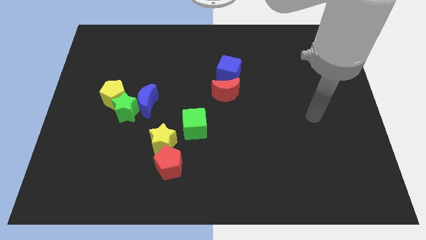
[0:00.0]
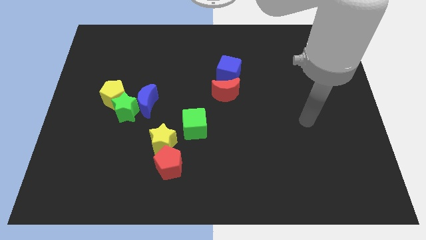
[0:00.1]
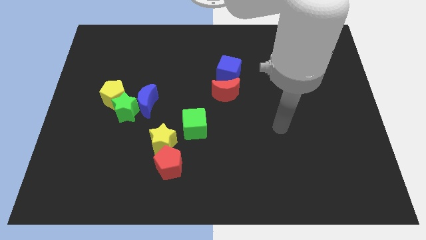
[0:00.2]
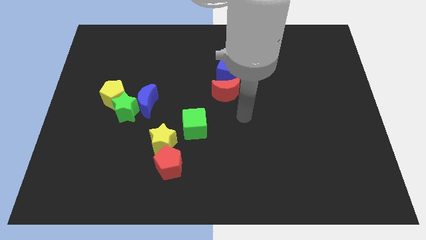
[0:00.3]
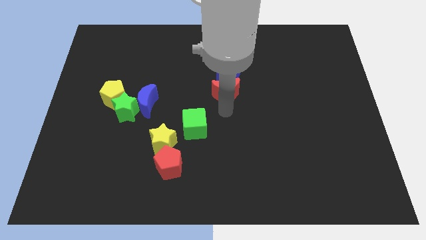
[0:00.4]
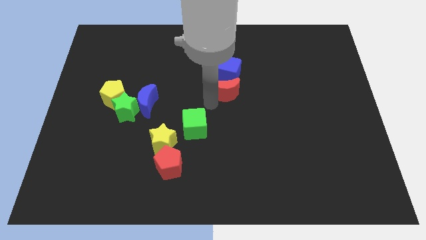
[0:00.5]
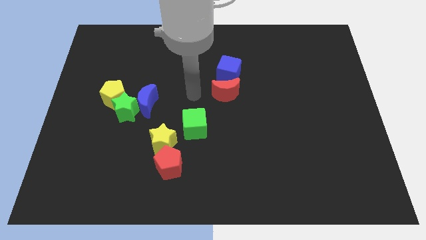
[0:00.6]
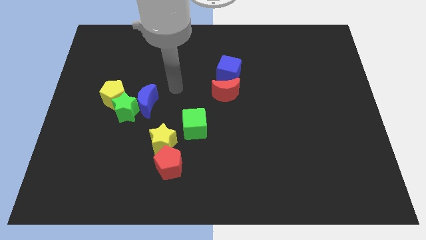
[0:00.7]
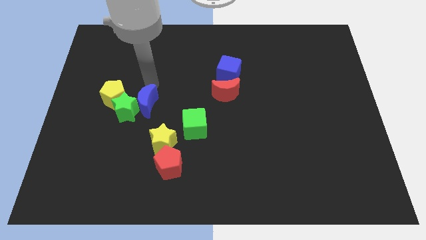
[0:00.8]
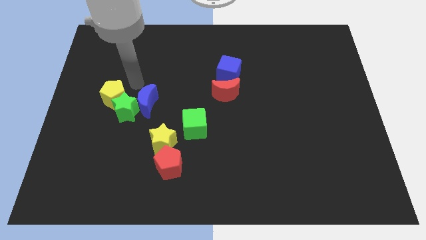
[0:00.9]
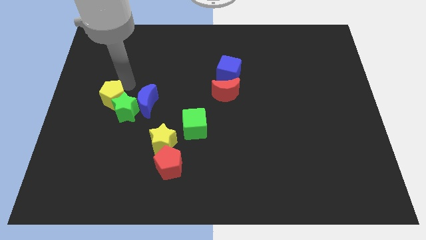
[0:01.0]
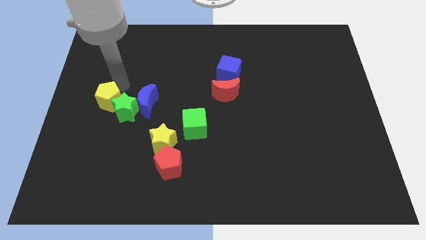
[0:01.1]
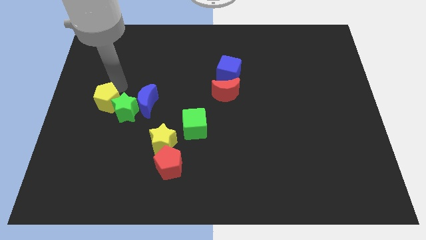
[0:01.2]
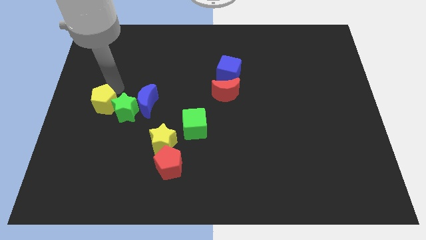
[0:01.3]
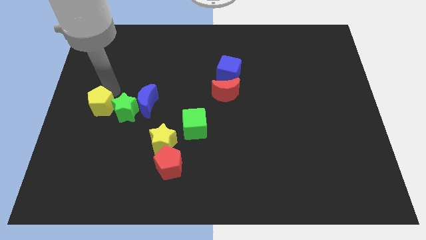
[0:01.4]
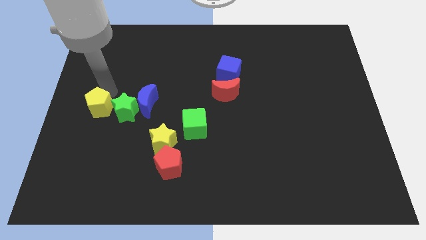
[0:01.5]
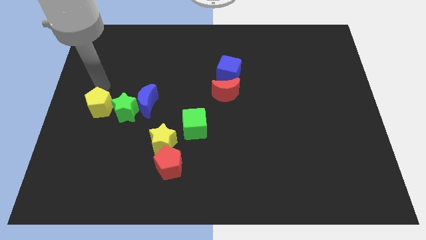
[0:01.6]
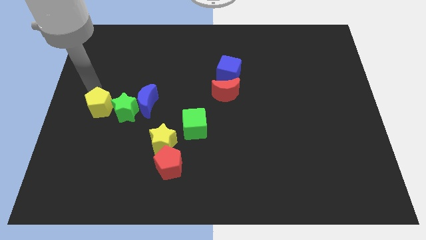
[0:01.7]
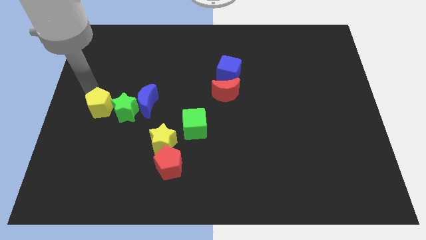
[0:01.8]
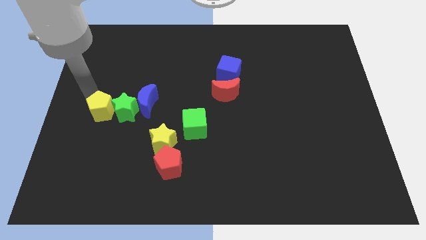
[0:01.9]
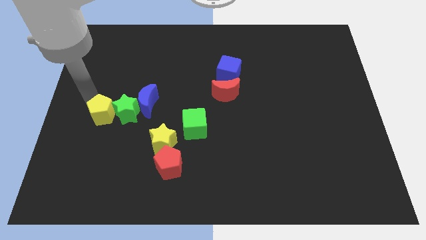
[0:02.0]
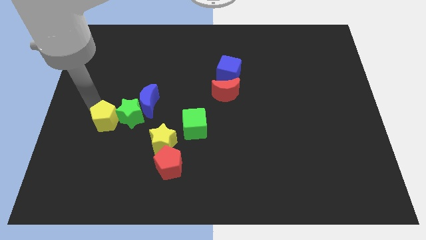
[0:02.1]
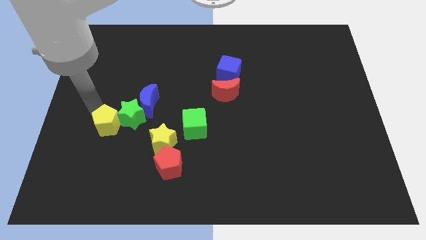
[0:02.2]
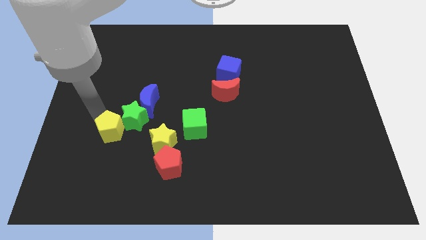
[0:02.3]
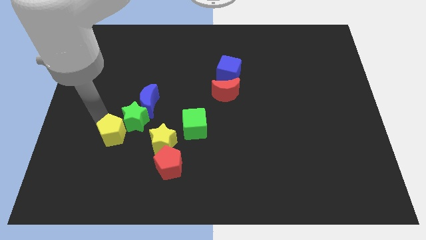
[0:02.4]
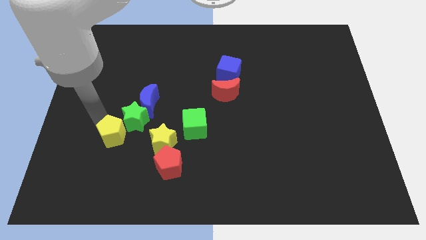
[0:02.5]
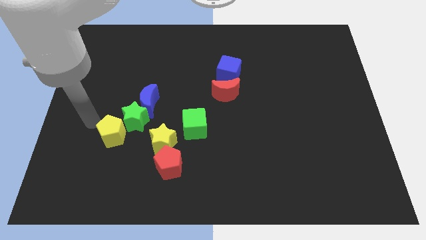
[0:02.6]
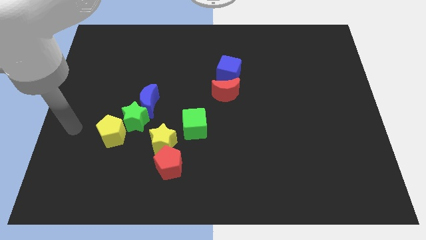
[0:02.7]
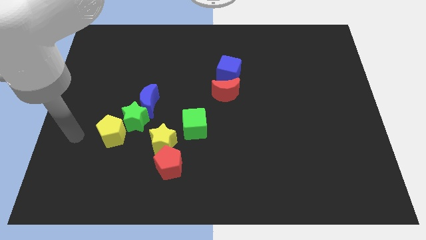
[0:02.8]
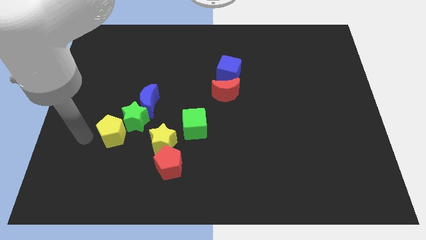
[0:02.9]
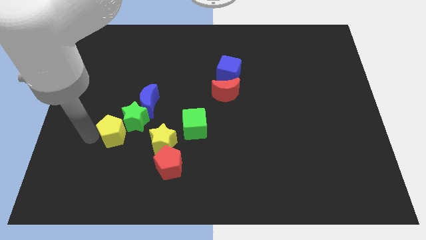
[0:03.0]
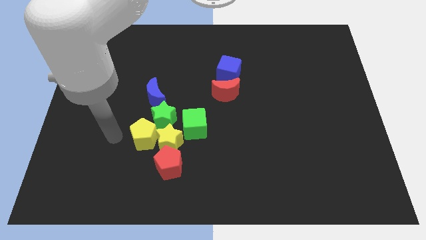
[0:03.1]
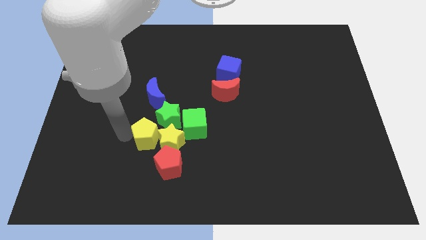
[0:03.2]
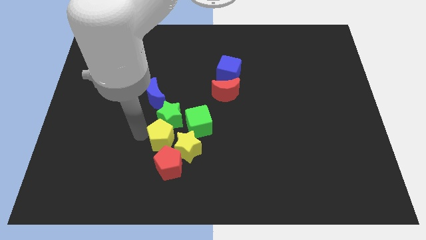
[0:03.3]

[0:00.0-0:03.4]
move the yellow pentagon to the yellow star

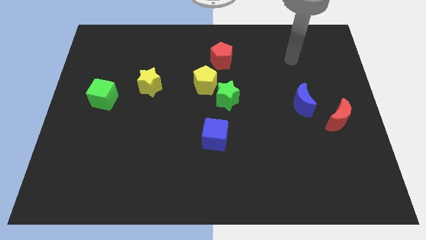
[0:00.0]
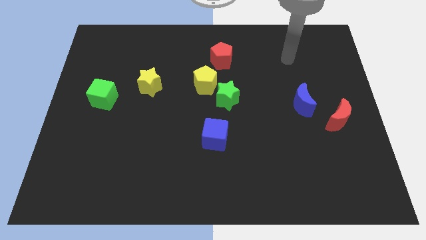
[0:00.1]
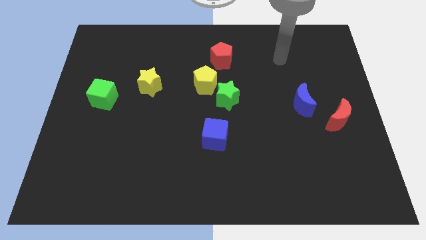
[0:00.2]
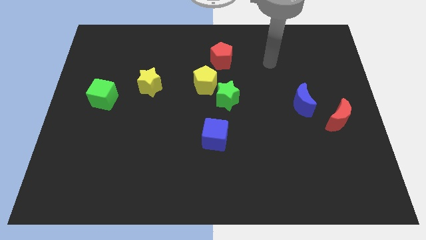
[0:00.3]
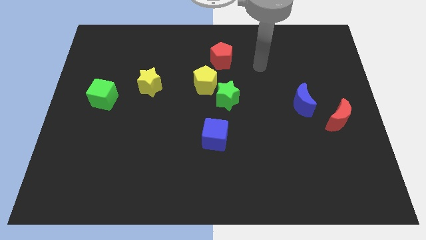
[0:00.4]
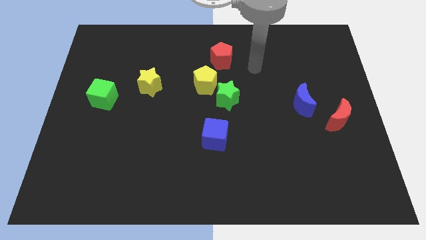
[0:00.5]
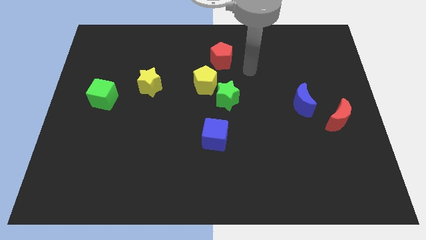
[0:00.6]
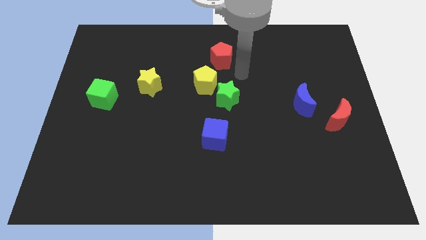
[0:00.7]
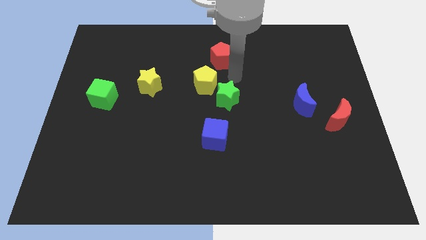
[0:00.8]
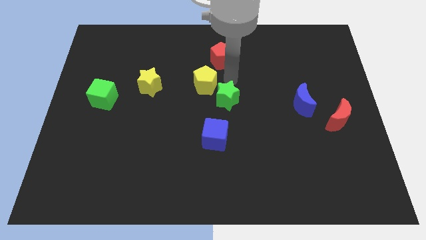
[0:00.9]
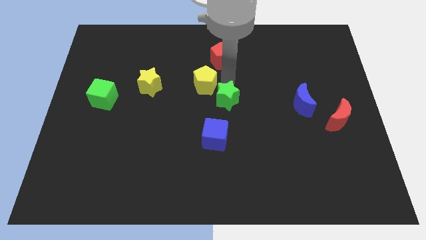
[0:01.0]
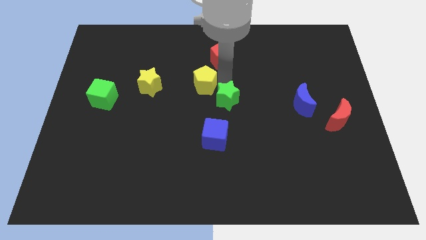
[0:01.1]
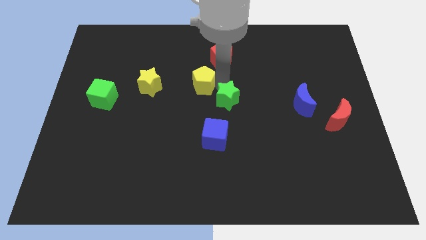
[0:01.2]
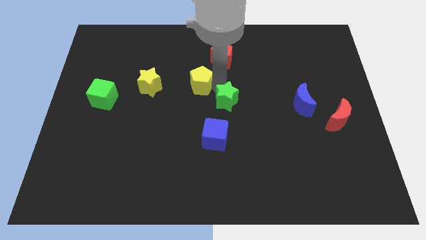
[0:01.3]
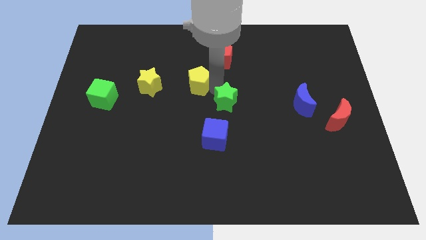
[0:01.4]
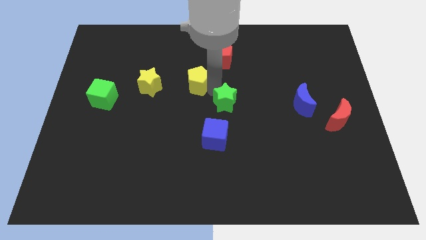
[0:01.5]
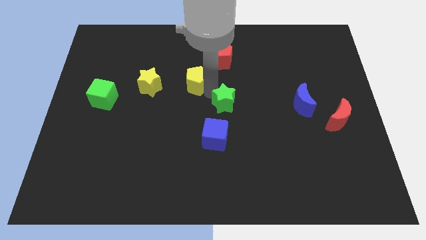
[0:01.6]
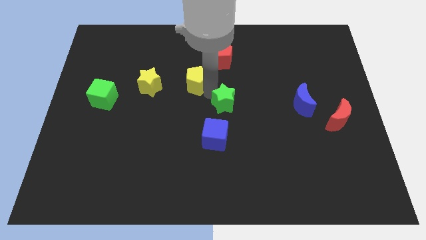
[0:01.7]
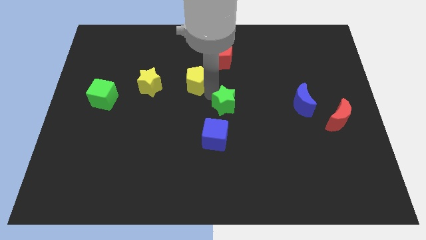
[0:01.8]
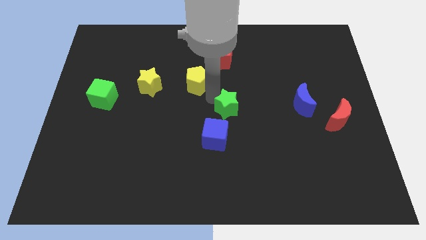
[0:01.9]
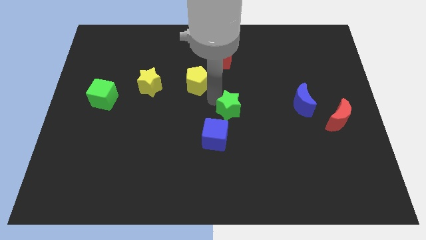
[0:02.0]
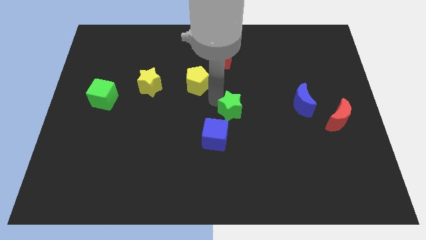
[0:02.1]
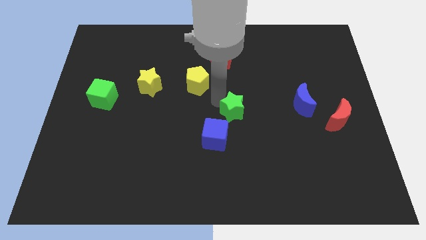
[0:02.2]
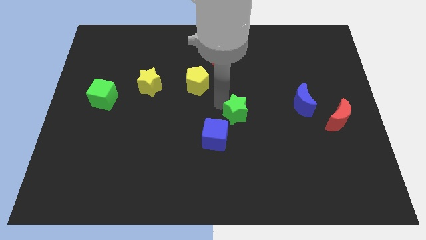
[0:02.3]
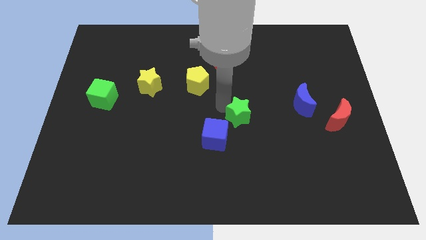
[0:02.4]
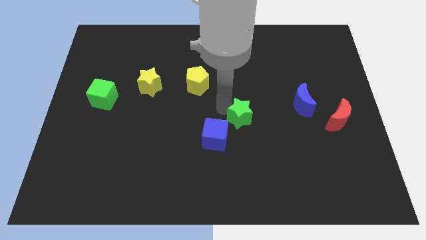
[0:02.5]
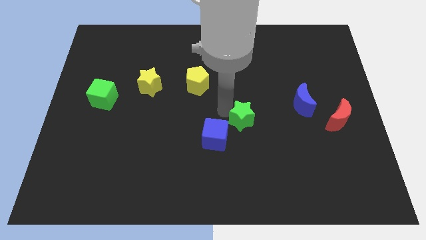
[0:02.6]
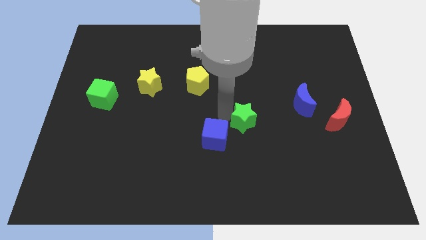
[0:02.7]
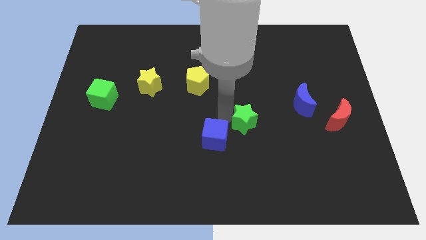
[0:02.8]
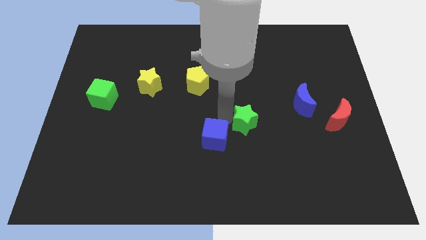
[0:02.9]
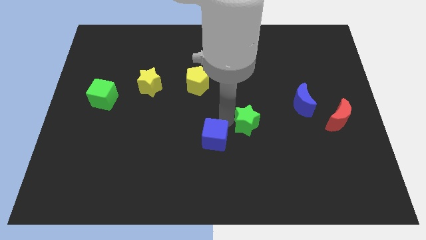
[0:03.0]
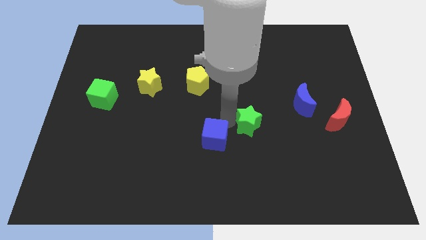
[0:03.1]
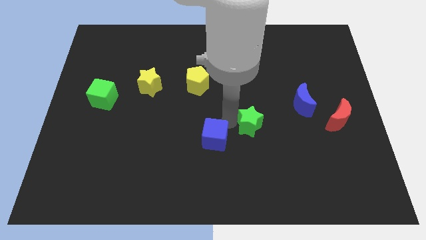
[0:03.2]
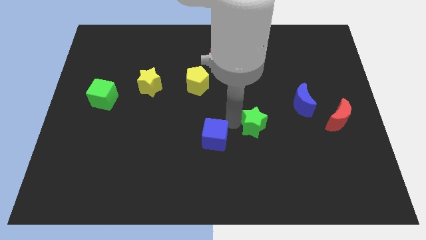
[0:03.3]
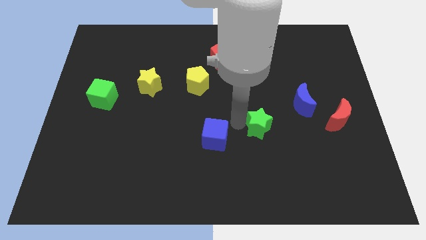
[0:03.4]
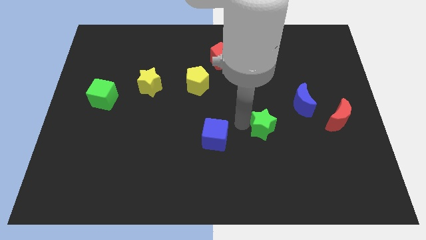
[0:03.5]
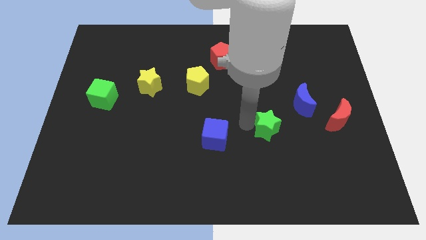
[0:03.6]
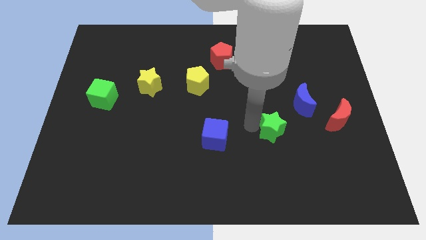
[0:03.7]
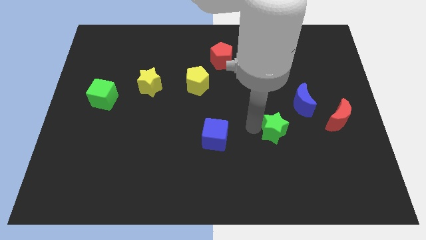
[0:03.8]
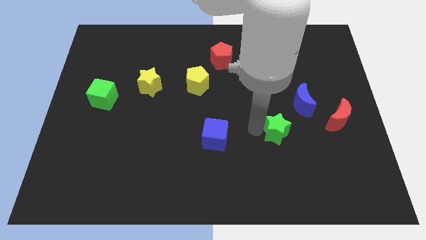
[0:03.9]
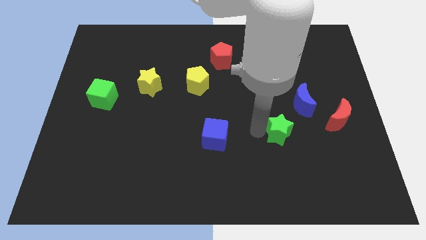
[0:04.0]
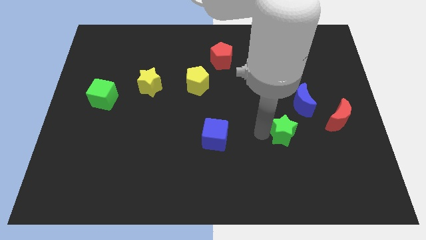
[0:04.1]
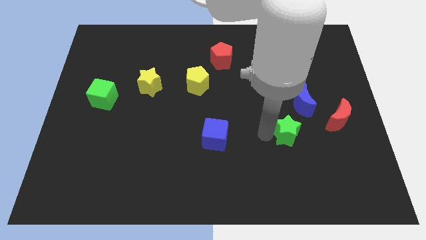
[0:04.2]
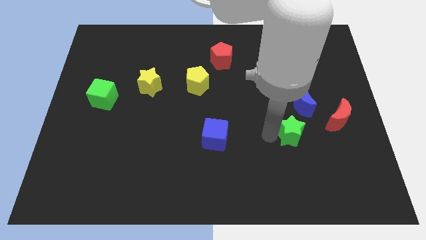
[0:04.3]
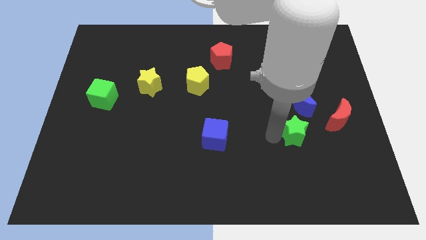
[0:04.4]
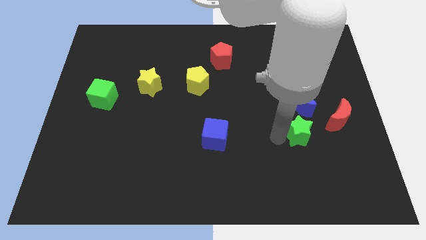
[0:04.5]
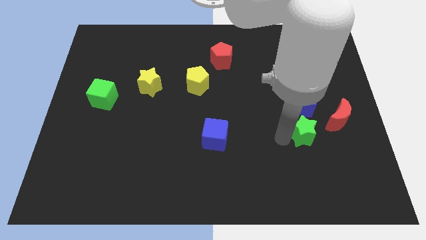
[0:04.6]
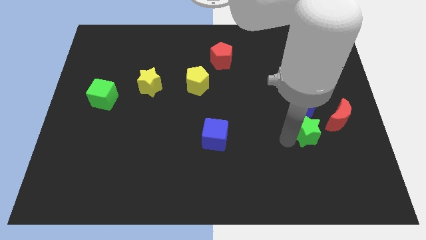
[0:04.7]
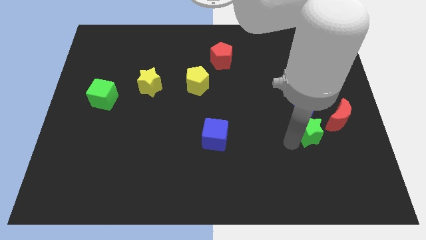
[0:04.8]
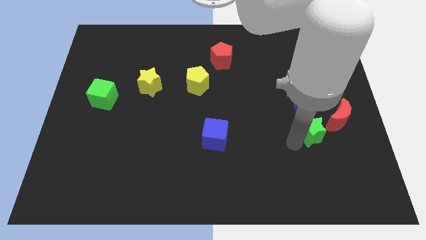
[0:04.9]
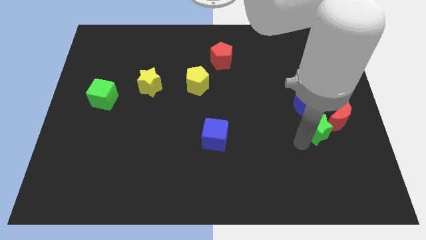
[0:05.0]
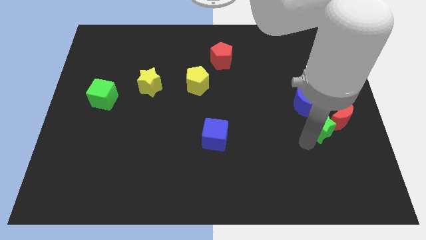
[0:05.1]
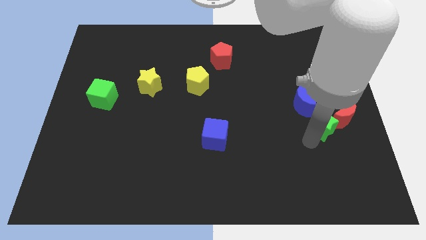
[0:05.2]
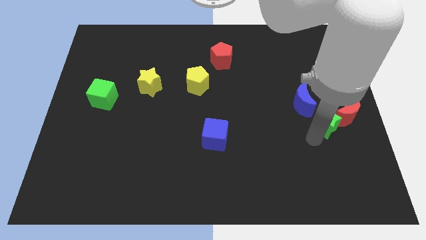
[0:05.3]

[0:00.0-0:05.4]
move the green star to the red moon
